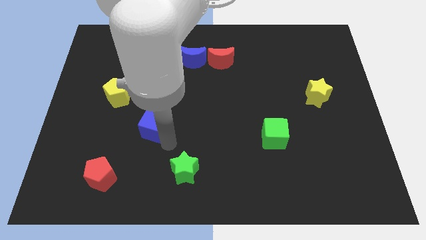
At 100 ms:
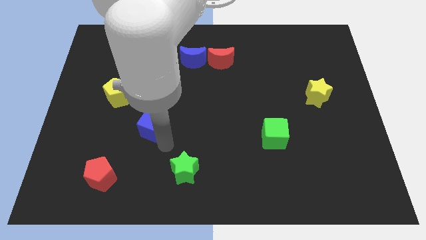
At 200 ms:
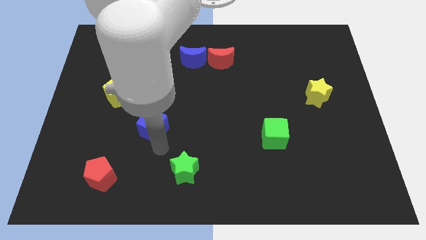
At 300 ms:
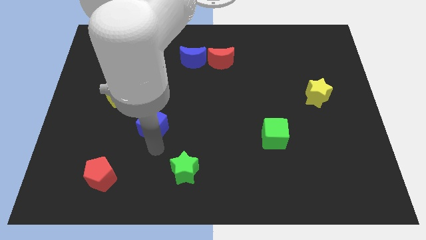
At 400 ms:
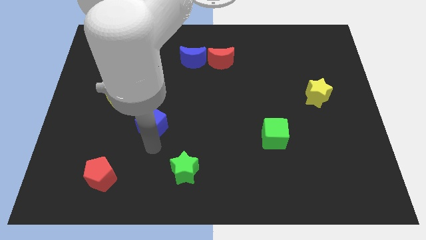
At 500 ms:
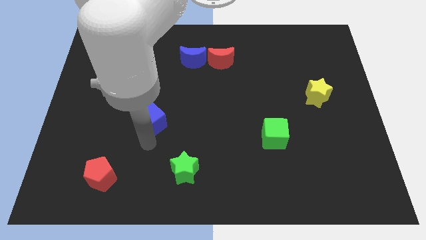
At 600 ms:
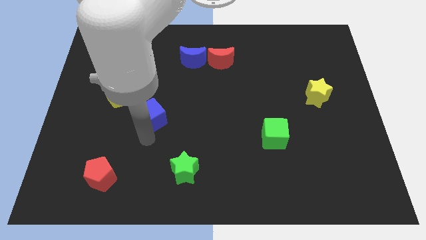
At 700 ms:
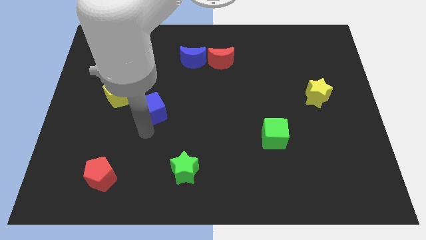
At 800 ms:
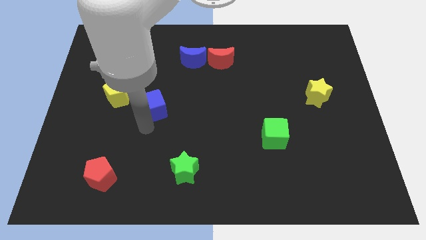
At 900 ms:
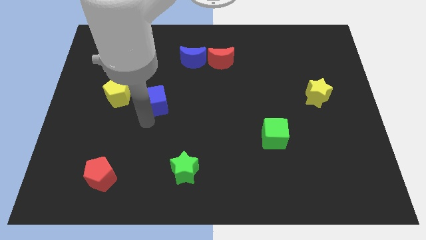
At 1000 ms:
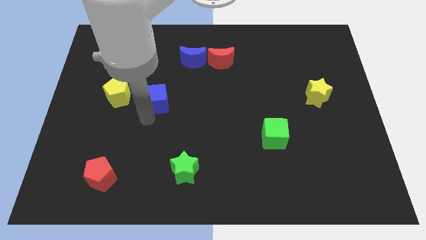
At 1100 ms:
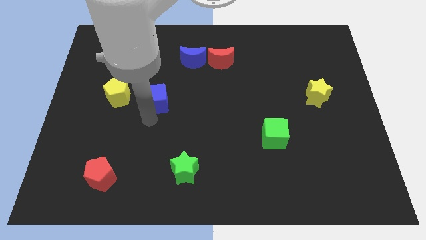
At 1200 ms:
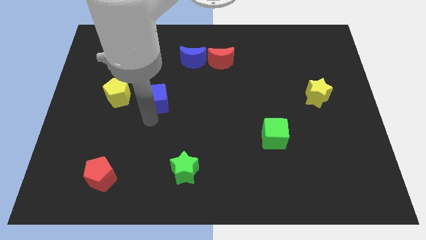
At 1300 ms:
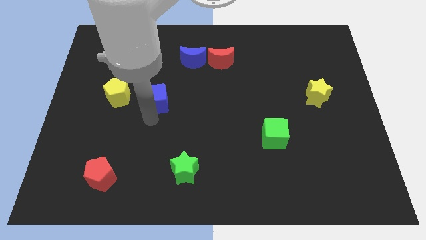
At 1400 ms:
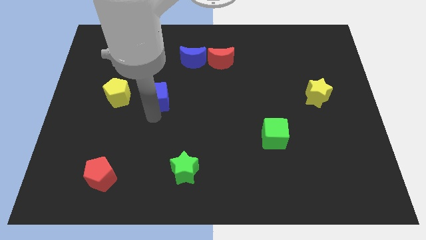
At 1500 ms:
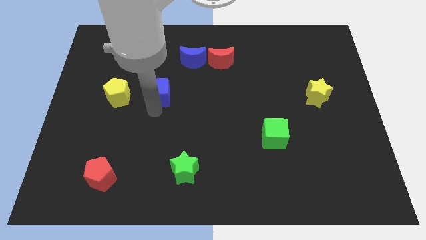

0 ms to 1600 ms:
place the blue cube to the right of the yellow pentagon

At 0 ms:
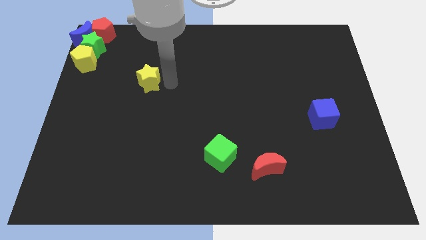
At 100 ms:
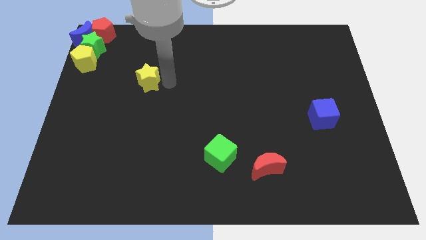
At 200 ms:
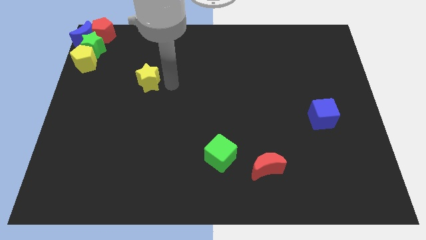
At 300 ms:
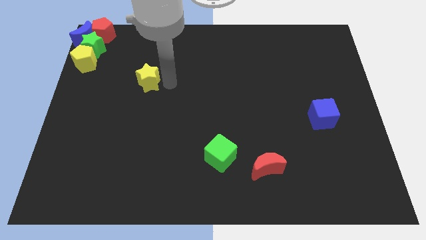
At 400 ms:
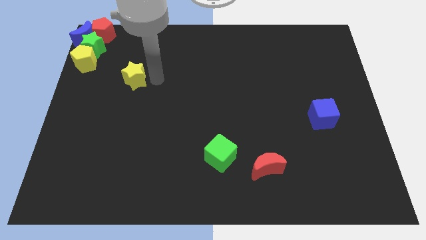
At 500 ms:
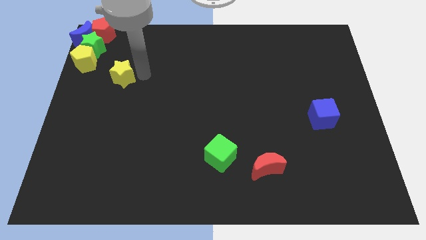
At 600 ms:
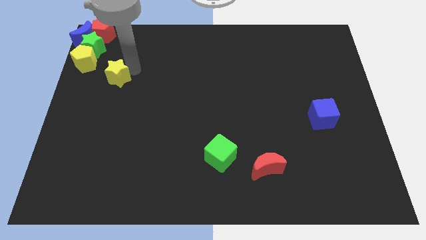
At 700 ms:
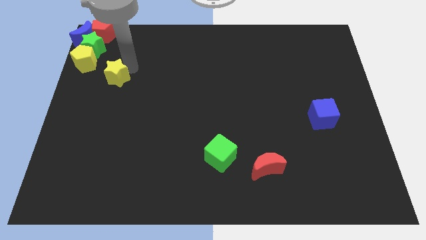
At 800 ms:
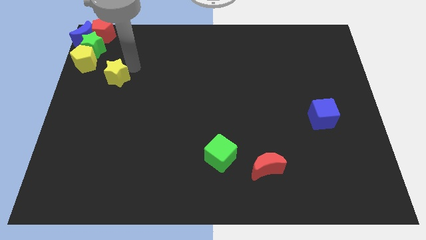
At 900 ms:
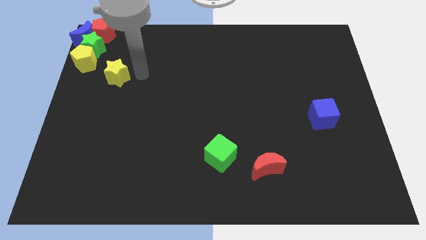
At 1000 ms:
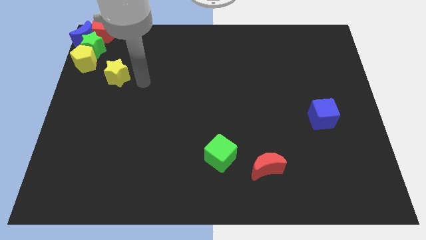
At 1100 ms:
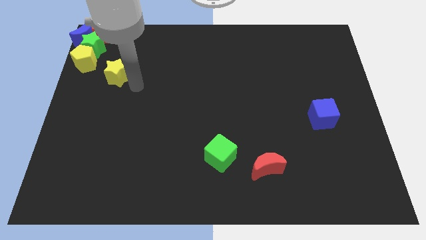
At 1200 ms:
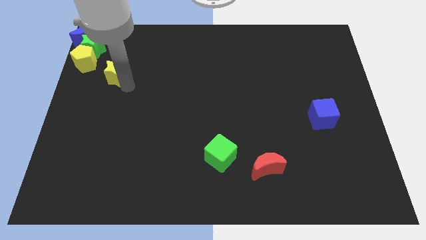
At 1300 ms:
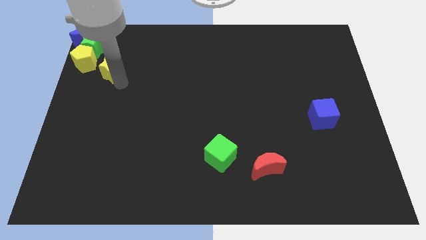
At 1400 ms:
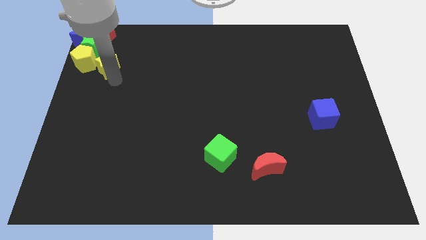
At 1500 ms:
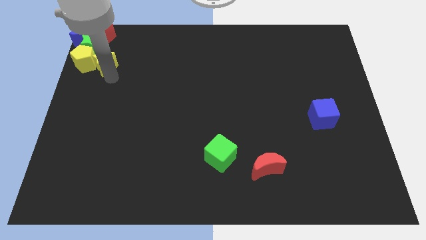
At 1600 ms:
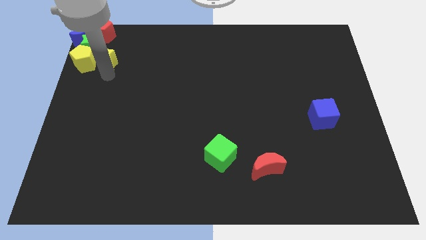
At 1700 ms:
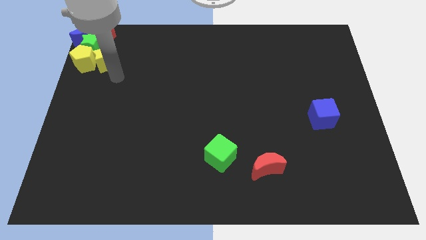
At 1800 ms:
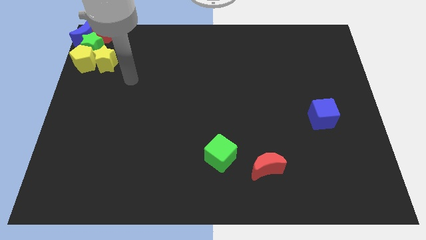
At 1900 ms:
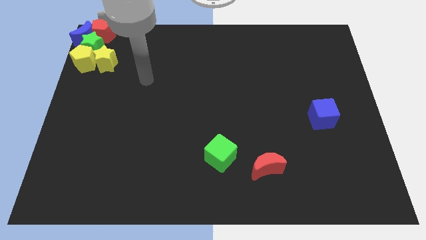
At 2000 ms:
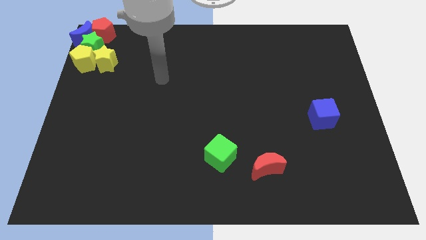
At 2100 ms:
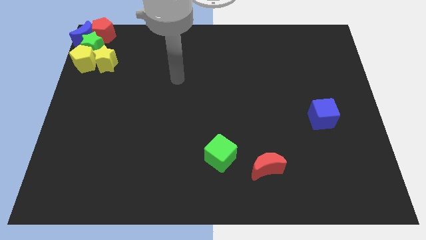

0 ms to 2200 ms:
move the yellow star to the right side of the yellow pentagon

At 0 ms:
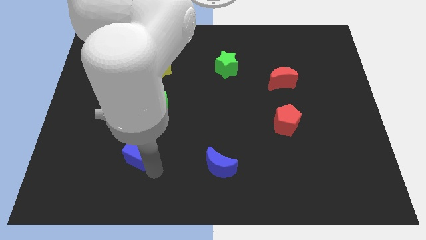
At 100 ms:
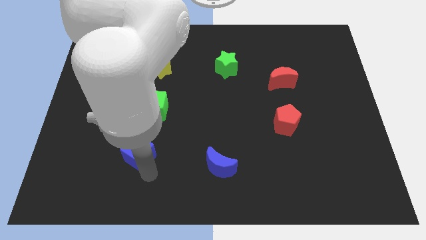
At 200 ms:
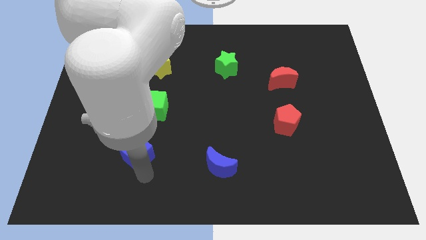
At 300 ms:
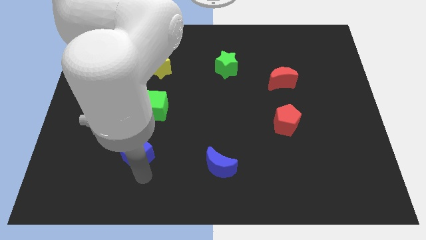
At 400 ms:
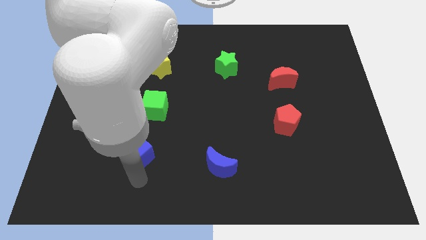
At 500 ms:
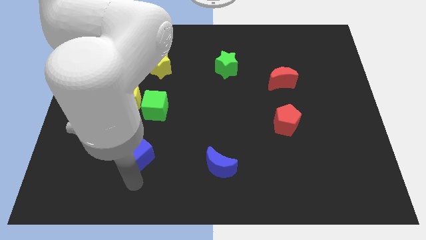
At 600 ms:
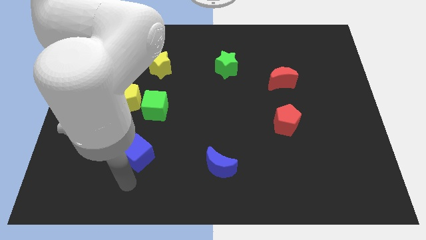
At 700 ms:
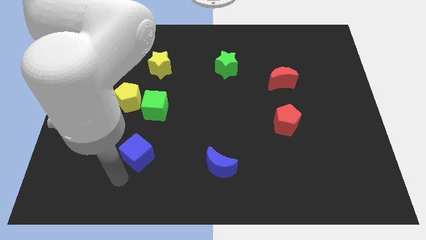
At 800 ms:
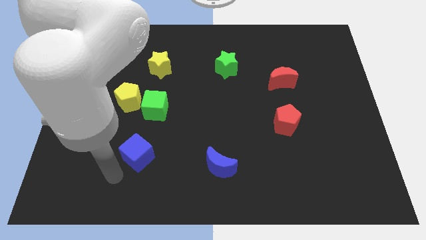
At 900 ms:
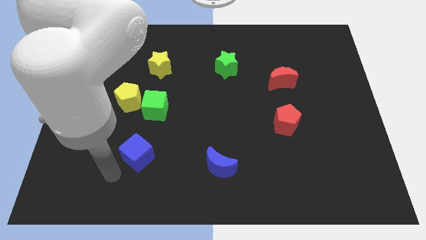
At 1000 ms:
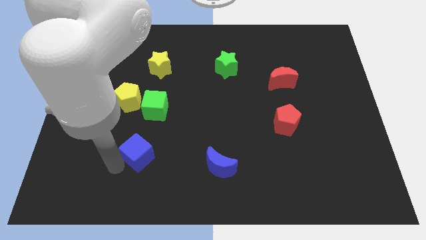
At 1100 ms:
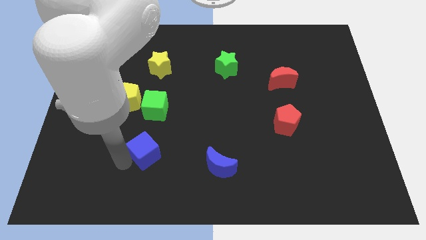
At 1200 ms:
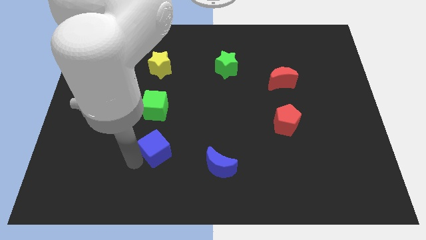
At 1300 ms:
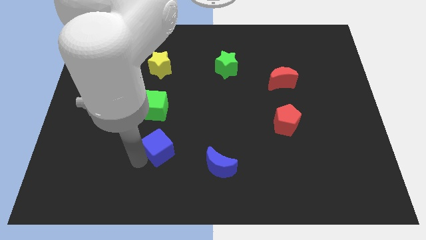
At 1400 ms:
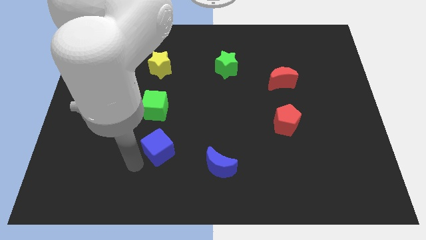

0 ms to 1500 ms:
move blue cube slightly right

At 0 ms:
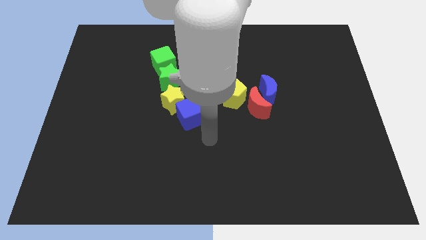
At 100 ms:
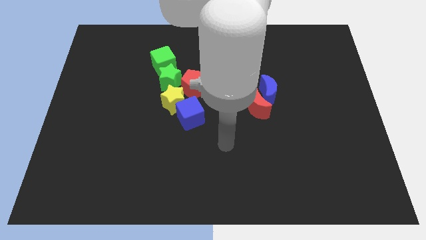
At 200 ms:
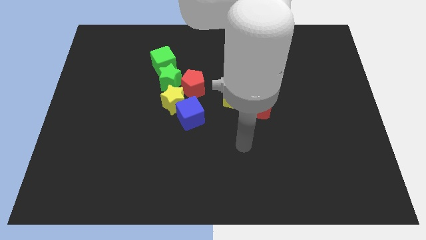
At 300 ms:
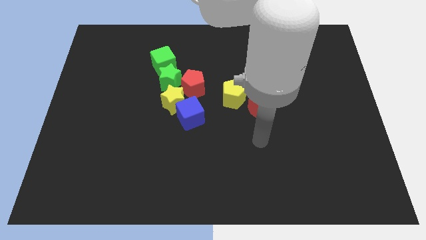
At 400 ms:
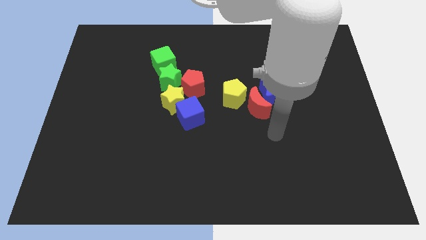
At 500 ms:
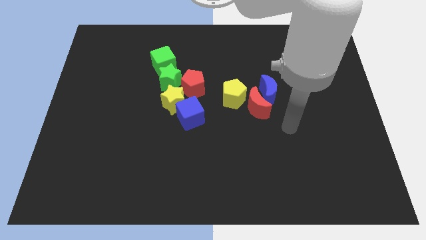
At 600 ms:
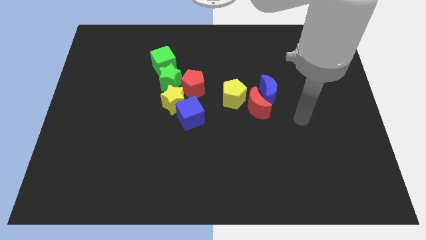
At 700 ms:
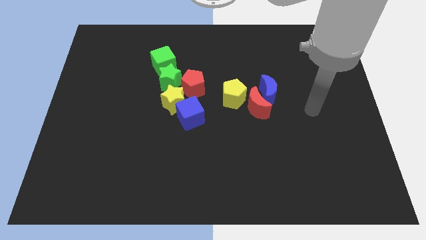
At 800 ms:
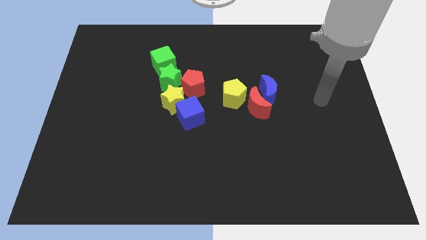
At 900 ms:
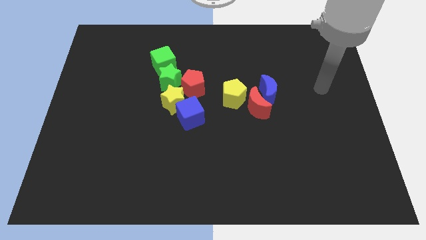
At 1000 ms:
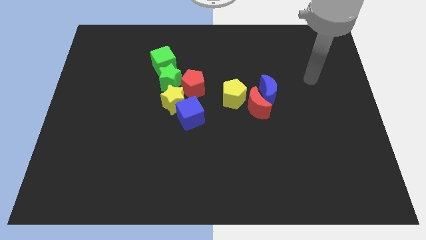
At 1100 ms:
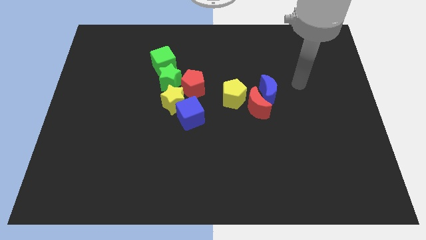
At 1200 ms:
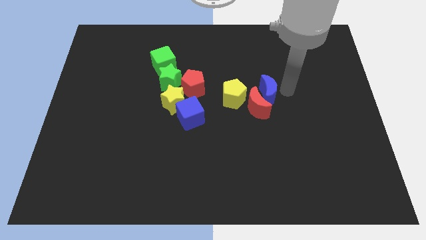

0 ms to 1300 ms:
move the arm away from the blue cube

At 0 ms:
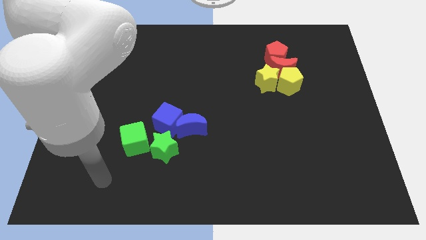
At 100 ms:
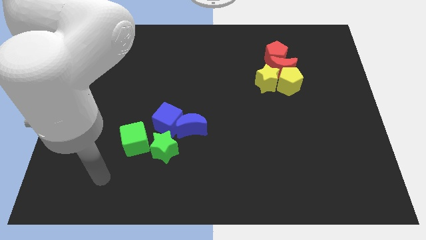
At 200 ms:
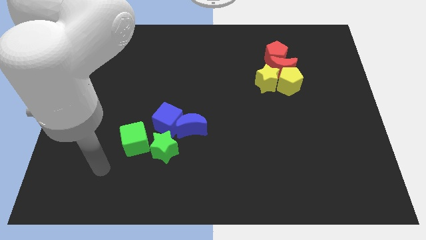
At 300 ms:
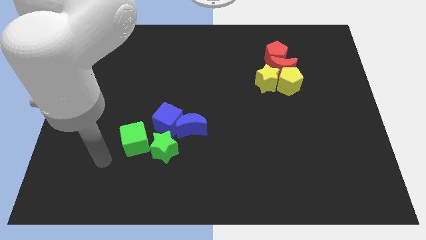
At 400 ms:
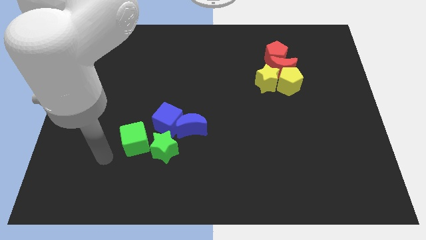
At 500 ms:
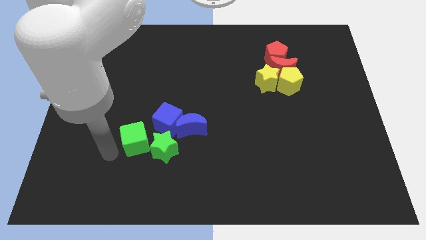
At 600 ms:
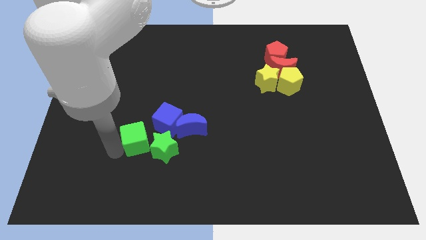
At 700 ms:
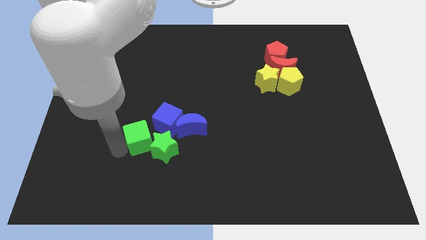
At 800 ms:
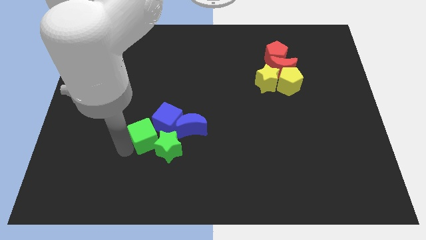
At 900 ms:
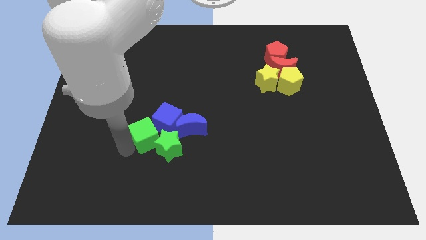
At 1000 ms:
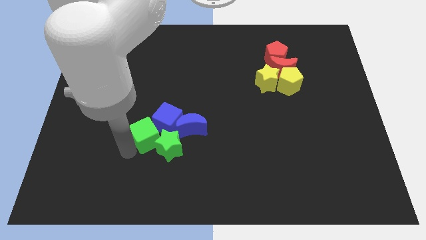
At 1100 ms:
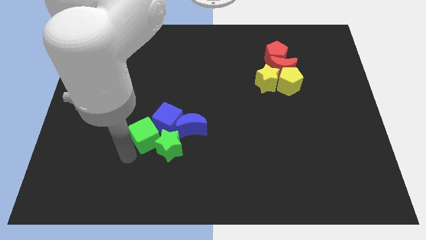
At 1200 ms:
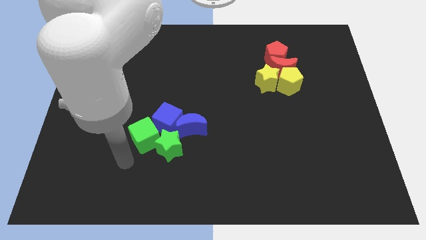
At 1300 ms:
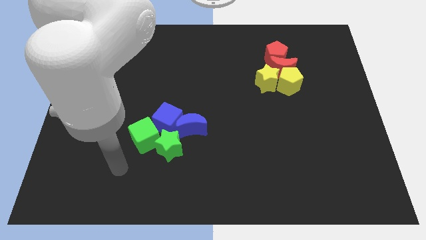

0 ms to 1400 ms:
make a group of blue and green blocks

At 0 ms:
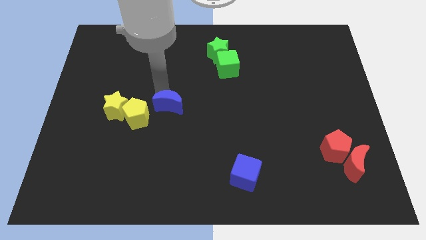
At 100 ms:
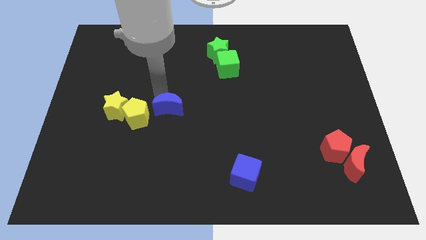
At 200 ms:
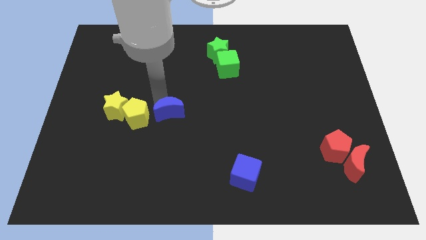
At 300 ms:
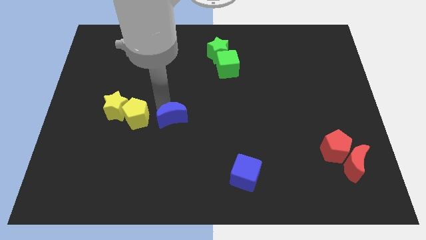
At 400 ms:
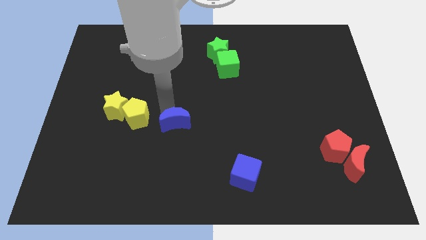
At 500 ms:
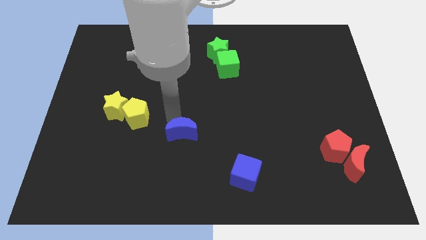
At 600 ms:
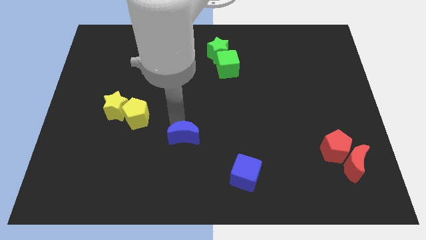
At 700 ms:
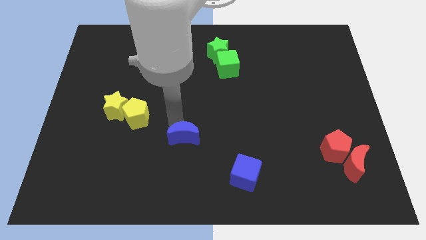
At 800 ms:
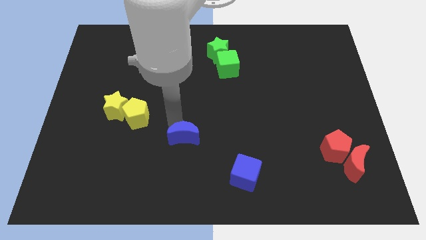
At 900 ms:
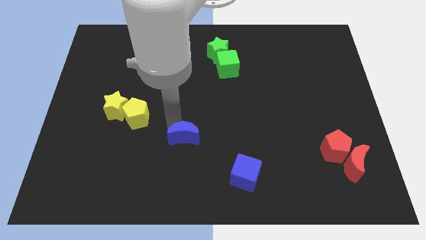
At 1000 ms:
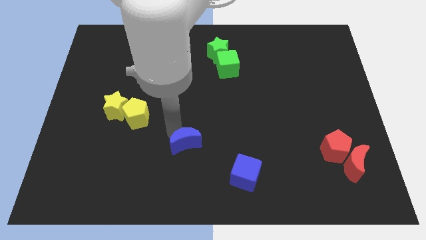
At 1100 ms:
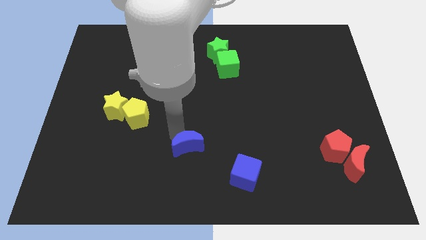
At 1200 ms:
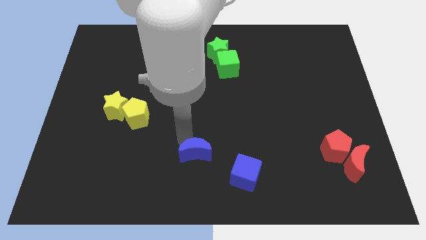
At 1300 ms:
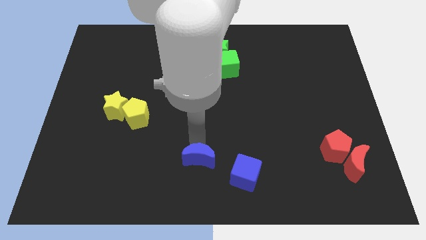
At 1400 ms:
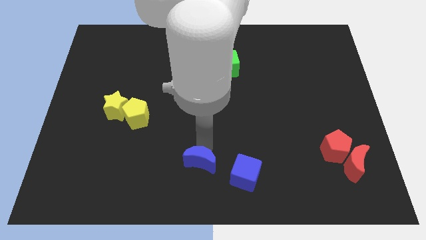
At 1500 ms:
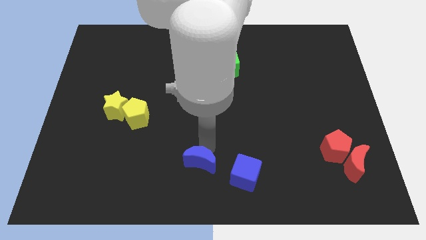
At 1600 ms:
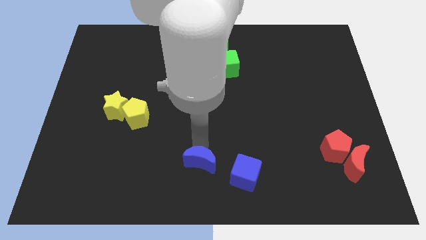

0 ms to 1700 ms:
move blue crescent close to blue cube
